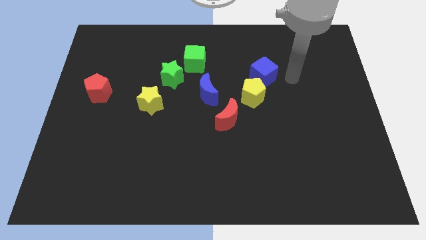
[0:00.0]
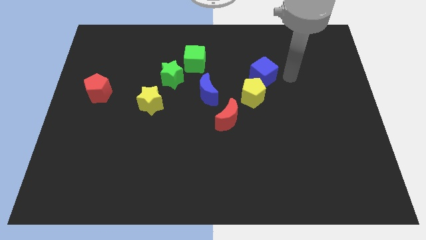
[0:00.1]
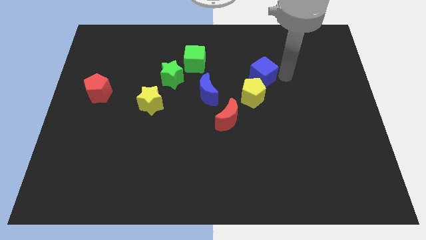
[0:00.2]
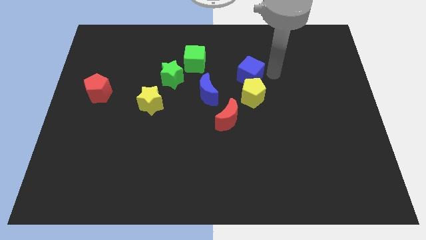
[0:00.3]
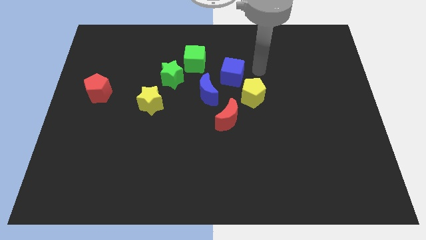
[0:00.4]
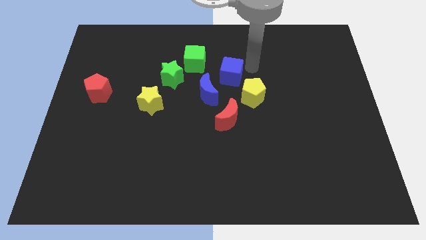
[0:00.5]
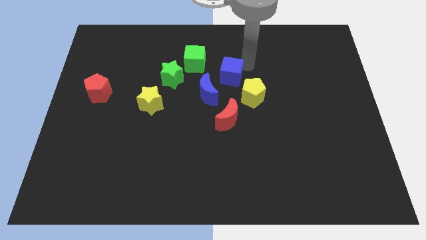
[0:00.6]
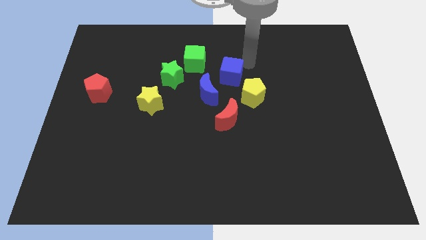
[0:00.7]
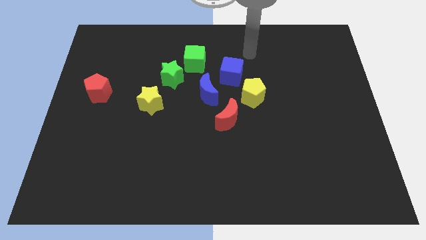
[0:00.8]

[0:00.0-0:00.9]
move the blue cube above the red moon

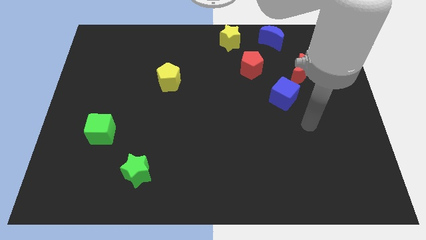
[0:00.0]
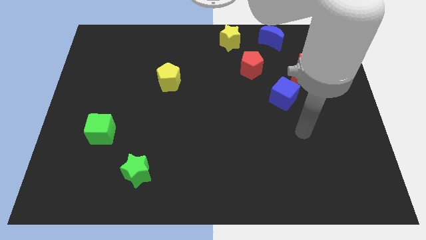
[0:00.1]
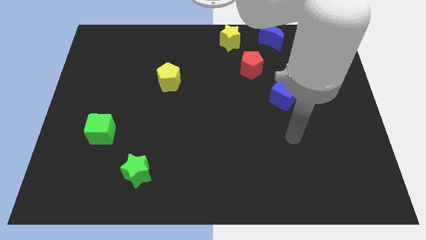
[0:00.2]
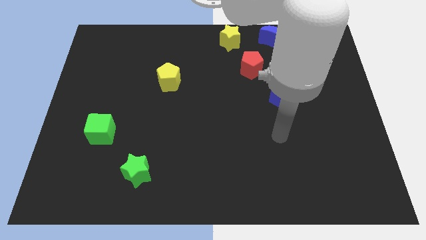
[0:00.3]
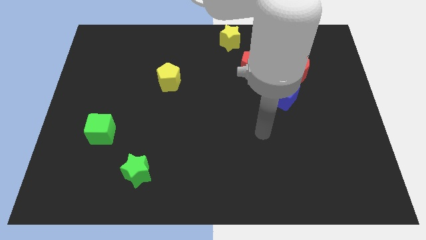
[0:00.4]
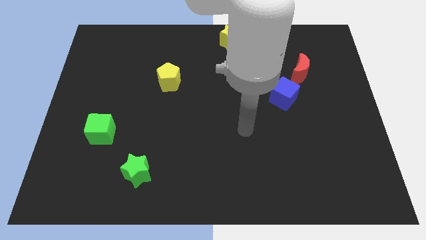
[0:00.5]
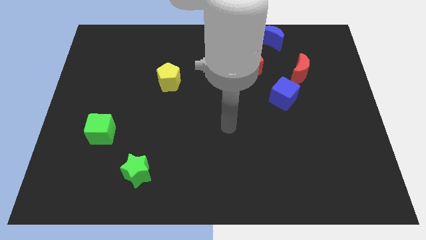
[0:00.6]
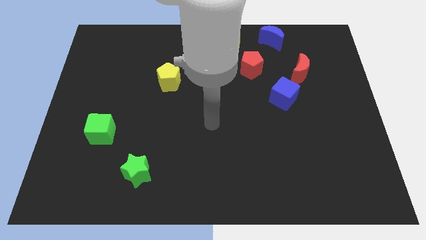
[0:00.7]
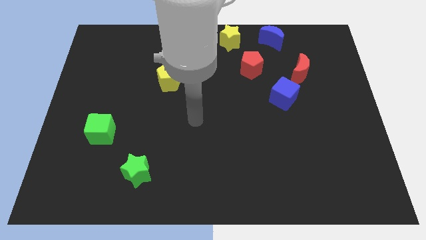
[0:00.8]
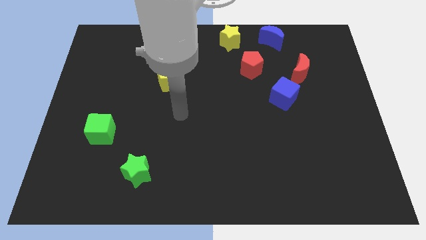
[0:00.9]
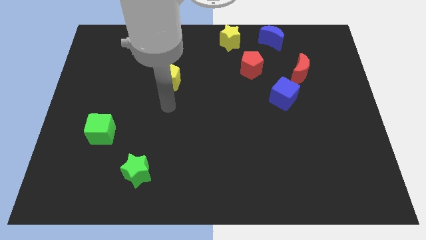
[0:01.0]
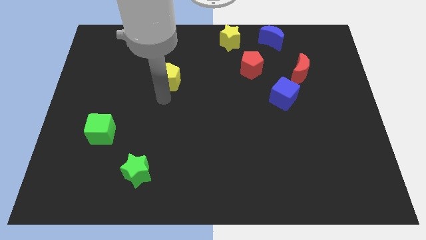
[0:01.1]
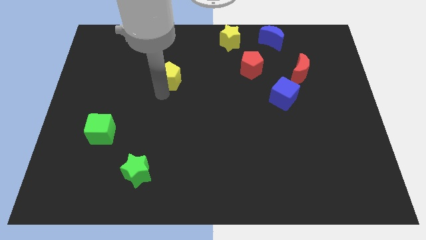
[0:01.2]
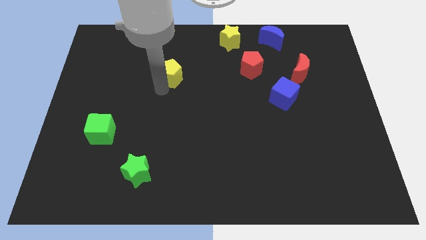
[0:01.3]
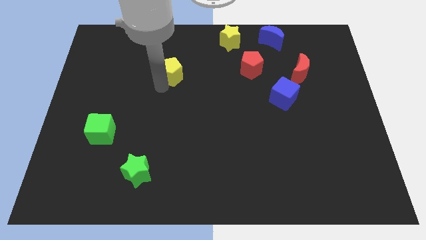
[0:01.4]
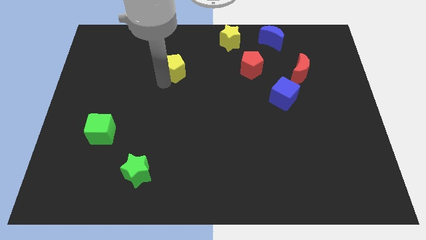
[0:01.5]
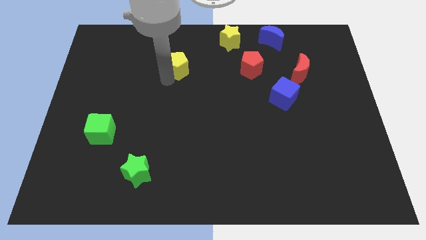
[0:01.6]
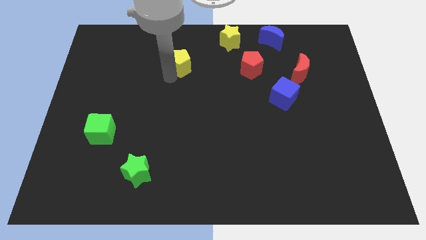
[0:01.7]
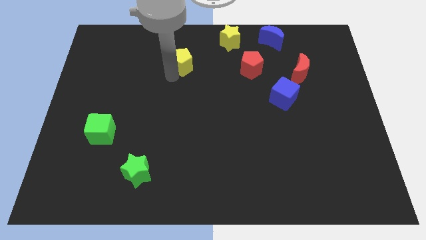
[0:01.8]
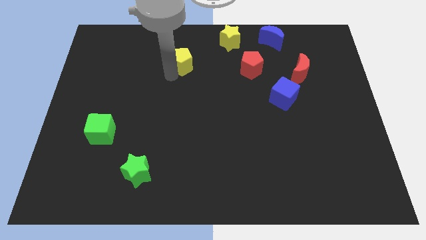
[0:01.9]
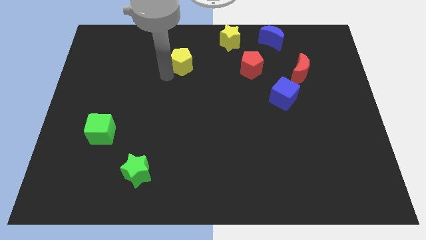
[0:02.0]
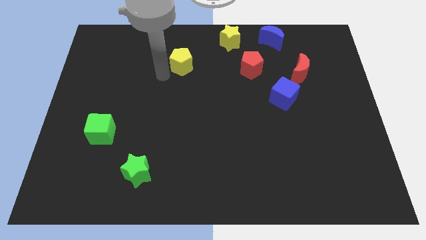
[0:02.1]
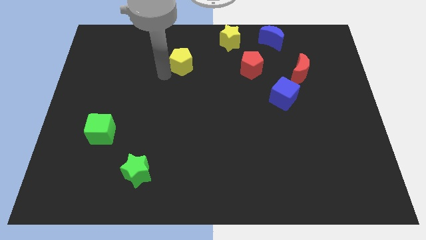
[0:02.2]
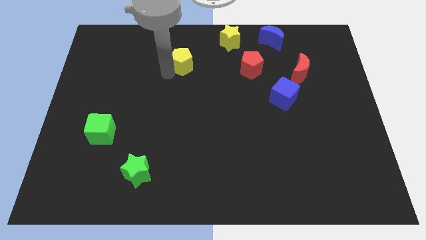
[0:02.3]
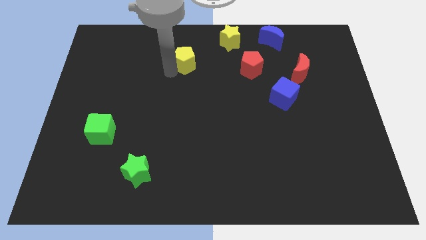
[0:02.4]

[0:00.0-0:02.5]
push the yellow pentagon to the left of the red pentagon

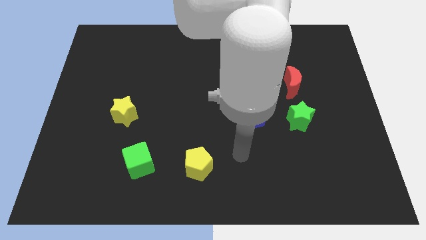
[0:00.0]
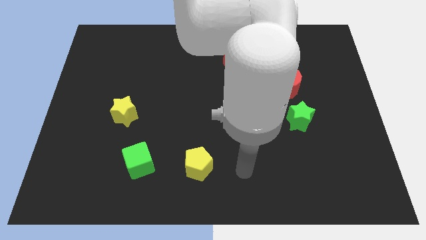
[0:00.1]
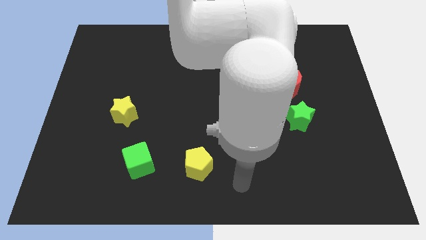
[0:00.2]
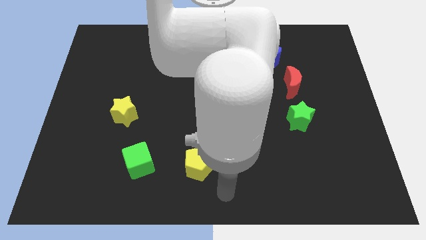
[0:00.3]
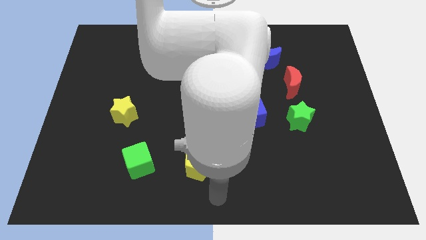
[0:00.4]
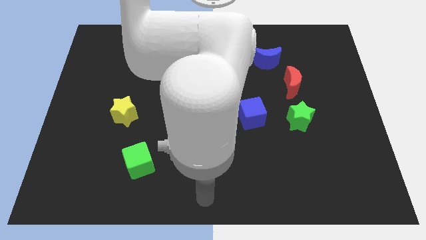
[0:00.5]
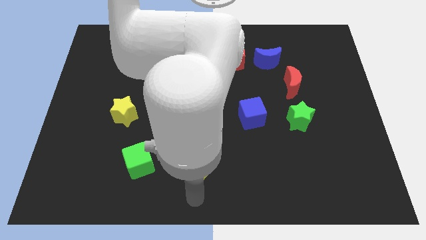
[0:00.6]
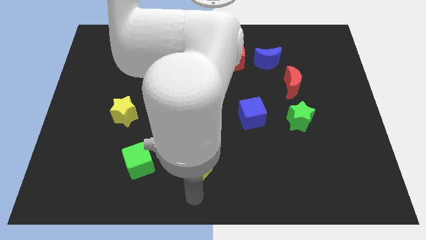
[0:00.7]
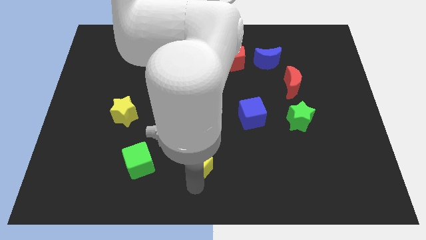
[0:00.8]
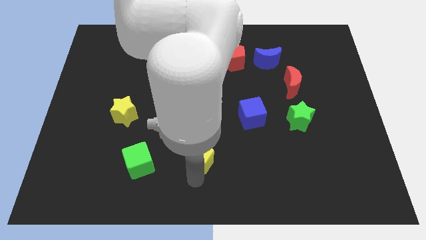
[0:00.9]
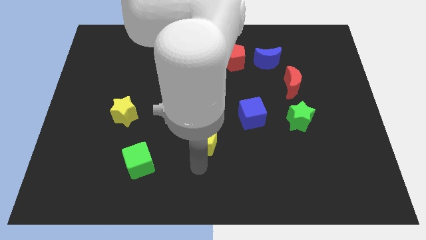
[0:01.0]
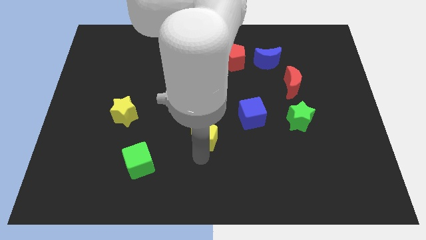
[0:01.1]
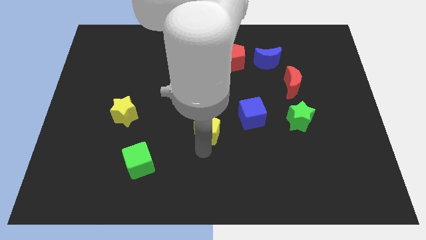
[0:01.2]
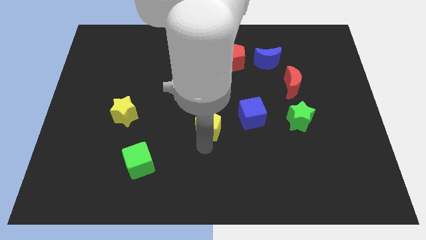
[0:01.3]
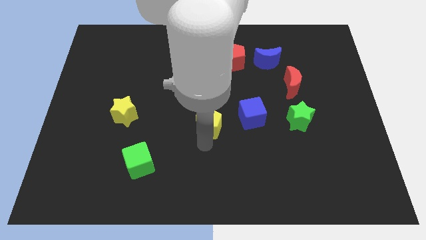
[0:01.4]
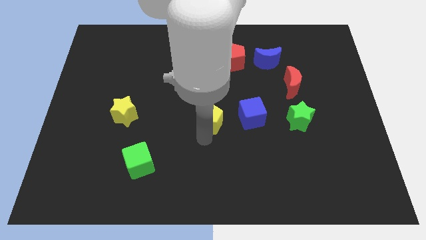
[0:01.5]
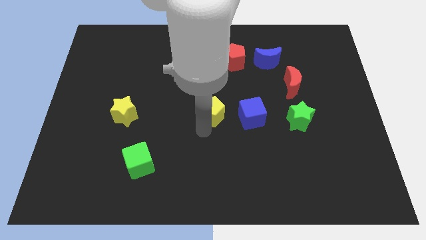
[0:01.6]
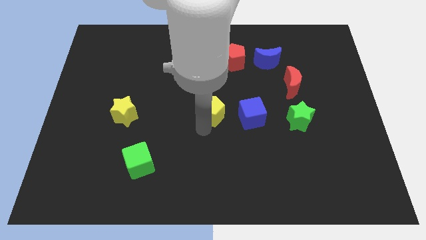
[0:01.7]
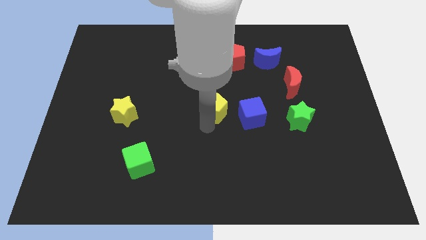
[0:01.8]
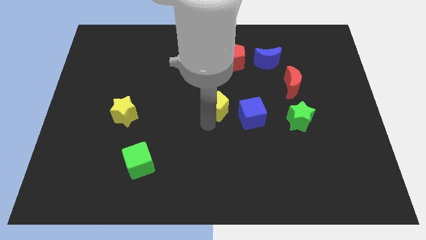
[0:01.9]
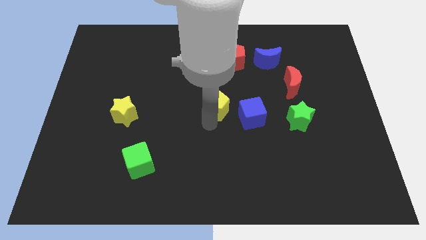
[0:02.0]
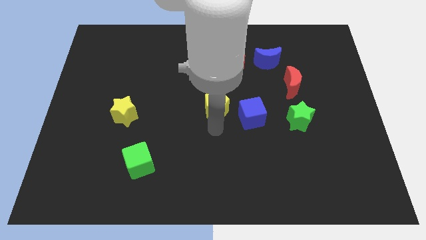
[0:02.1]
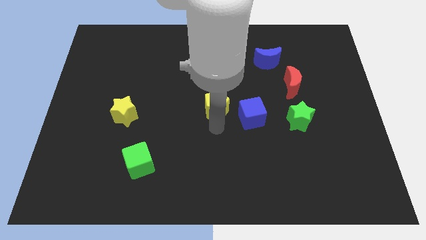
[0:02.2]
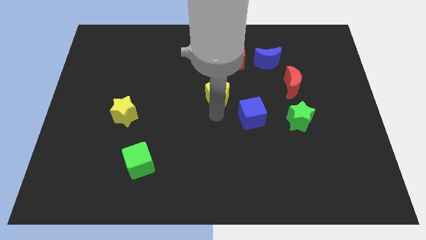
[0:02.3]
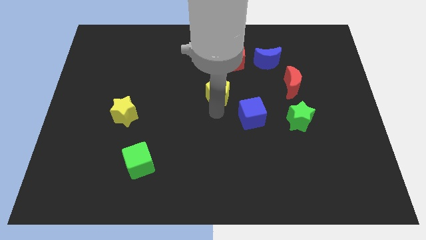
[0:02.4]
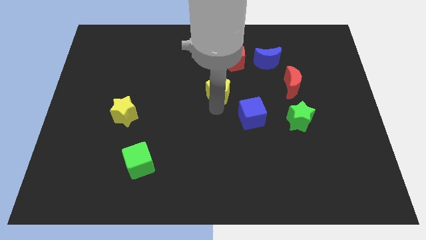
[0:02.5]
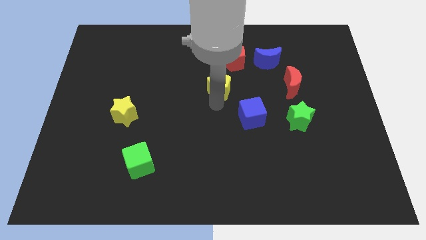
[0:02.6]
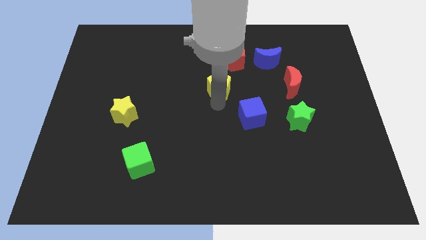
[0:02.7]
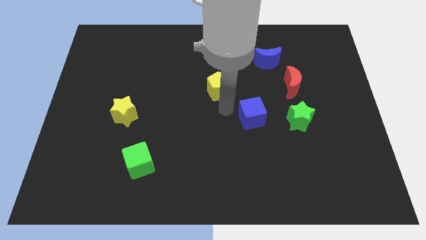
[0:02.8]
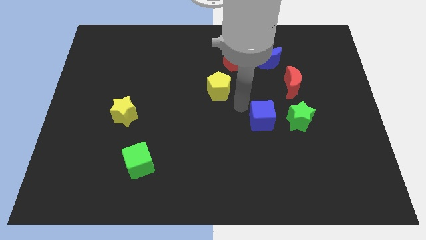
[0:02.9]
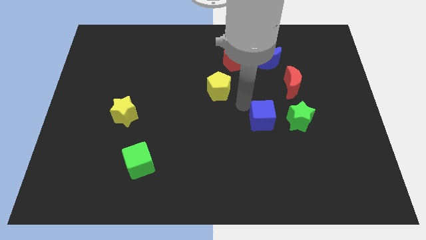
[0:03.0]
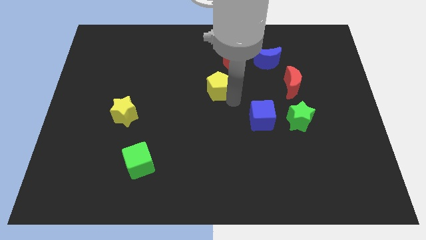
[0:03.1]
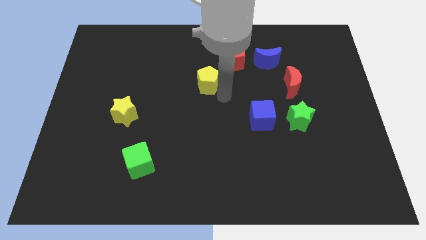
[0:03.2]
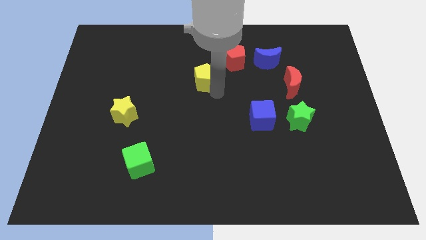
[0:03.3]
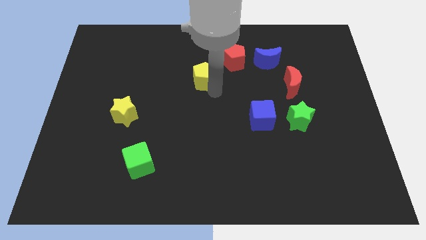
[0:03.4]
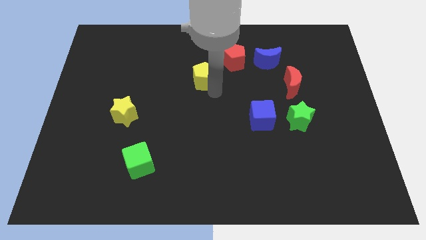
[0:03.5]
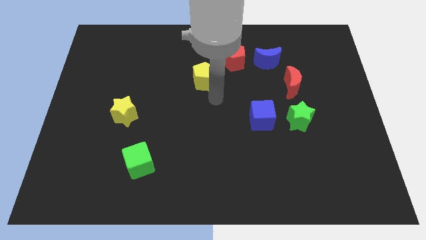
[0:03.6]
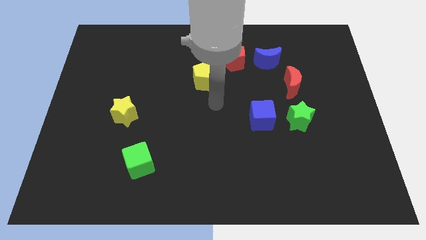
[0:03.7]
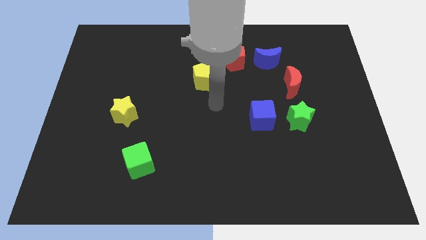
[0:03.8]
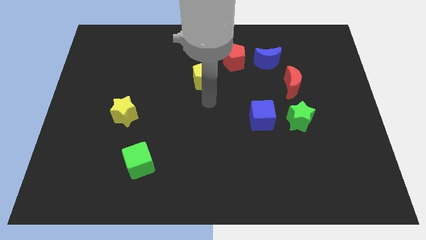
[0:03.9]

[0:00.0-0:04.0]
place the yellow pentagon towards the bottom left side of the red pentagon

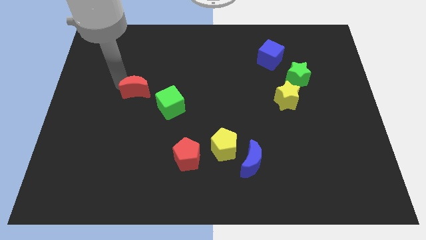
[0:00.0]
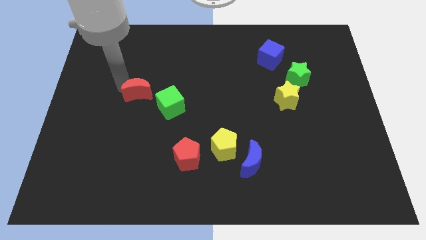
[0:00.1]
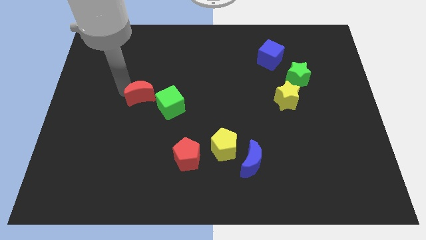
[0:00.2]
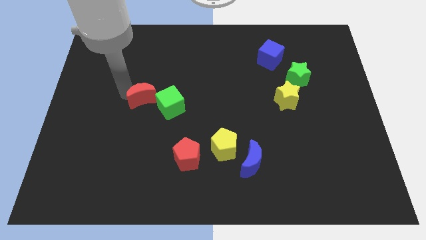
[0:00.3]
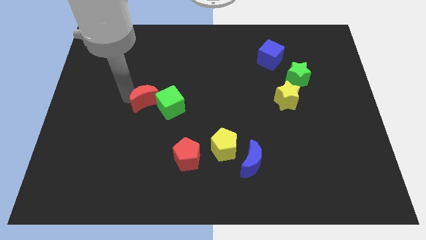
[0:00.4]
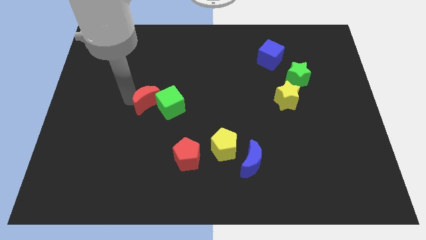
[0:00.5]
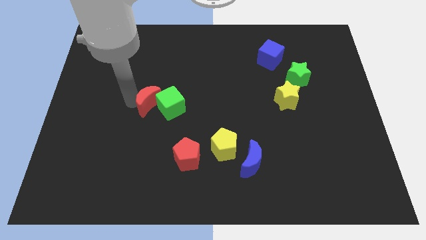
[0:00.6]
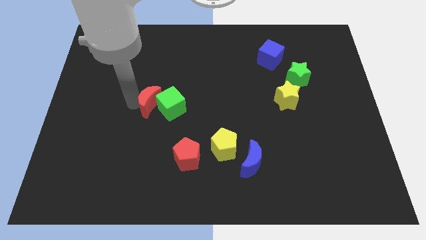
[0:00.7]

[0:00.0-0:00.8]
slide red moon left to the green cube

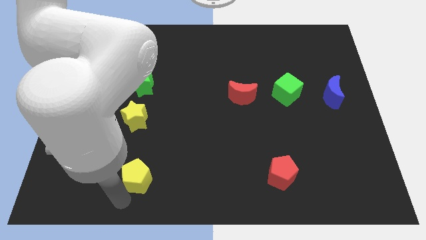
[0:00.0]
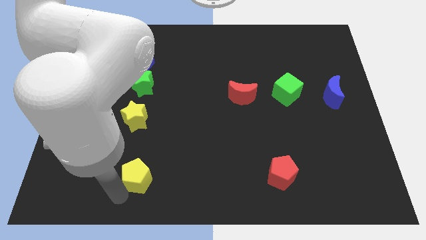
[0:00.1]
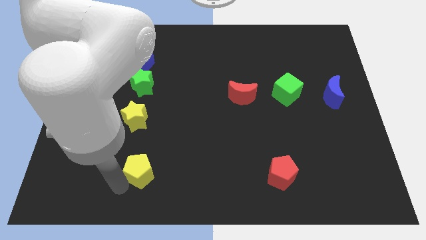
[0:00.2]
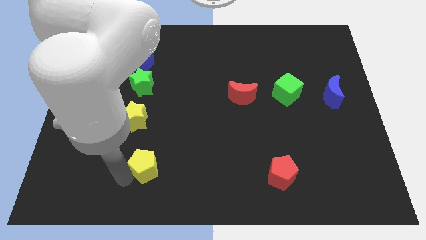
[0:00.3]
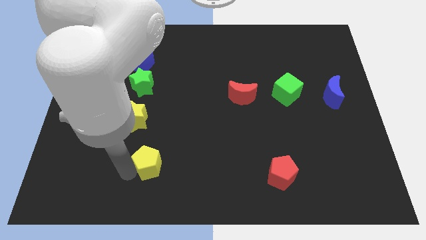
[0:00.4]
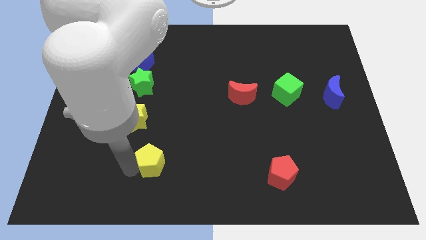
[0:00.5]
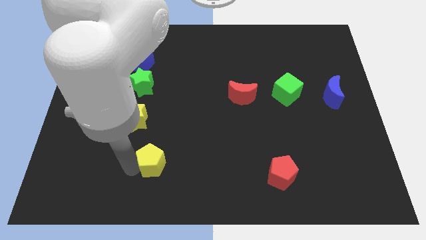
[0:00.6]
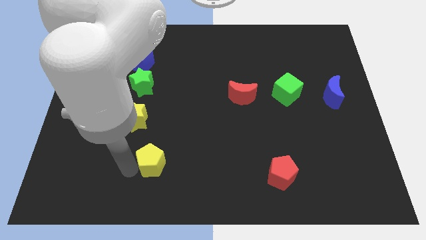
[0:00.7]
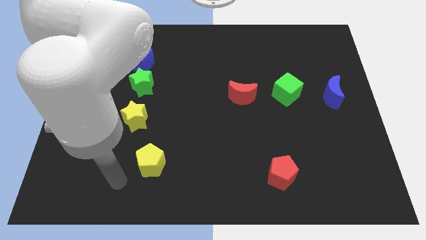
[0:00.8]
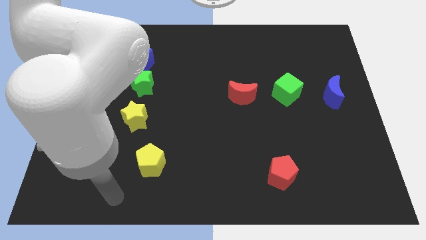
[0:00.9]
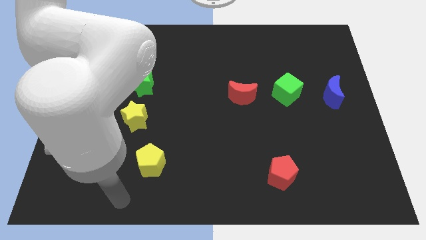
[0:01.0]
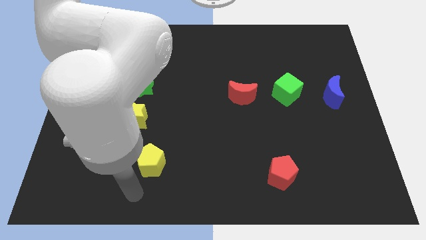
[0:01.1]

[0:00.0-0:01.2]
drag yellow pentagon diagonally bottom right to the yellow star
